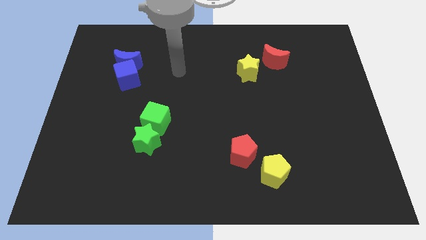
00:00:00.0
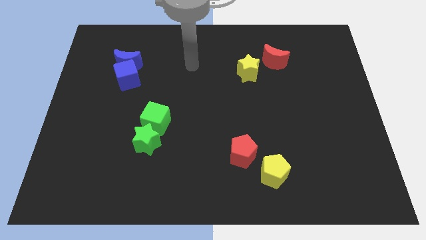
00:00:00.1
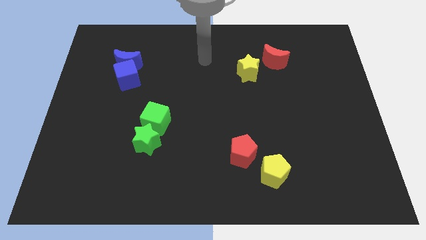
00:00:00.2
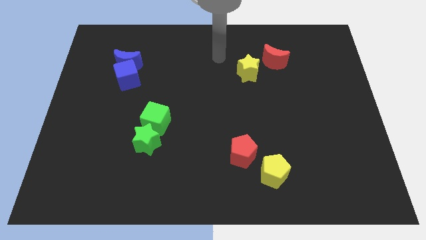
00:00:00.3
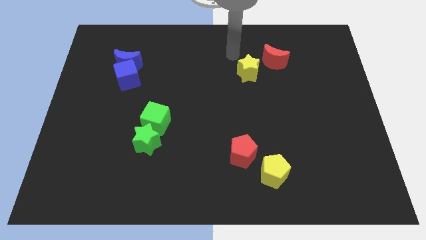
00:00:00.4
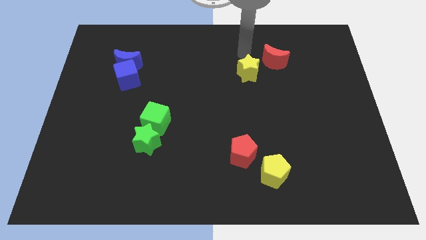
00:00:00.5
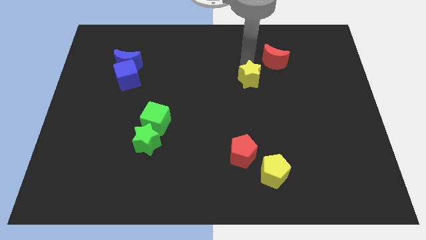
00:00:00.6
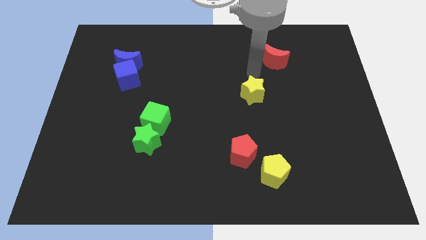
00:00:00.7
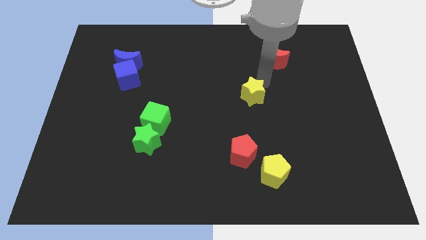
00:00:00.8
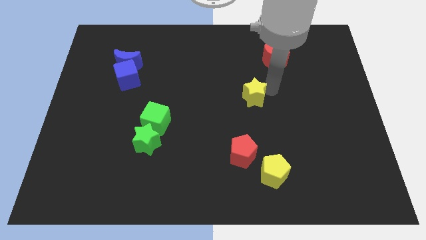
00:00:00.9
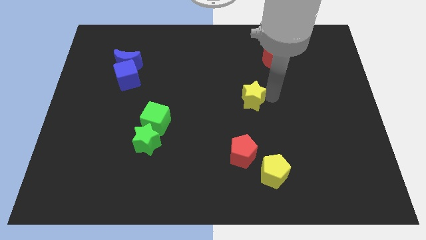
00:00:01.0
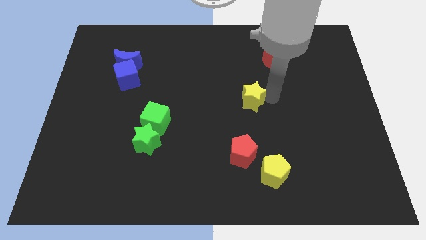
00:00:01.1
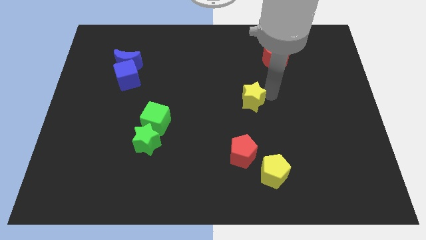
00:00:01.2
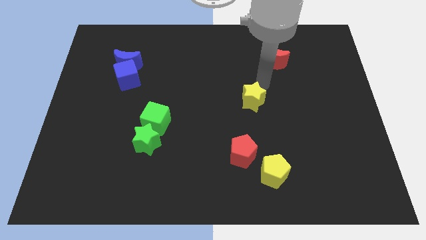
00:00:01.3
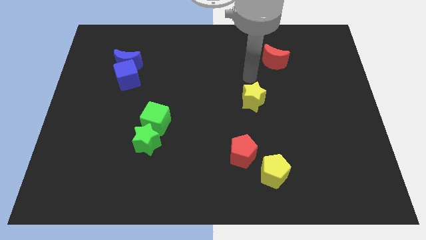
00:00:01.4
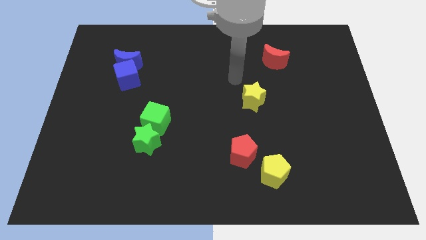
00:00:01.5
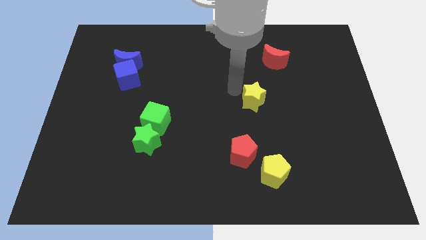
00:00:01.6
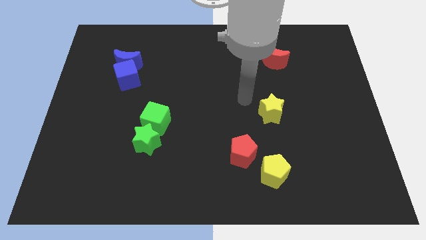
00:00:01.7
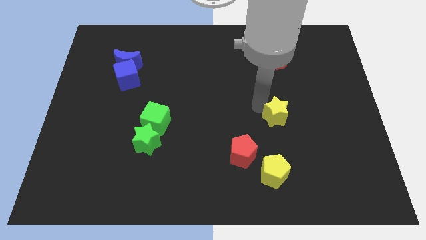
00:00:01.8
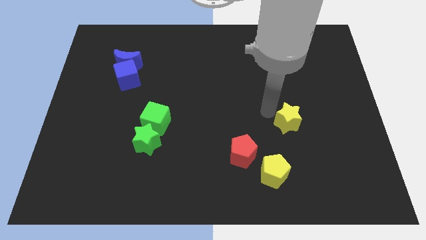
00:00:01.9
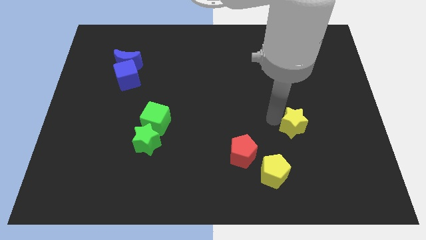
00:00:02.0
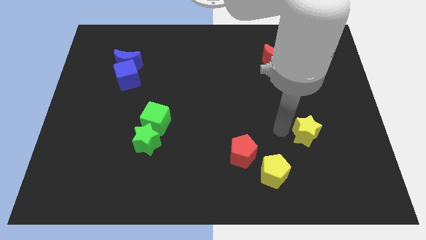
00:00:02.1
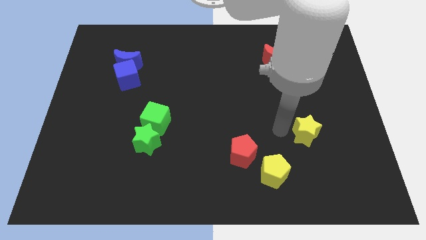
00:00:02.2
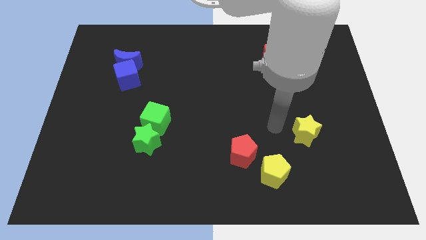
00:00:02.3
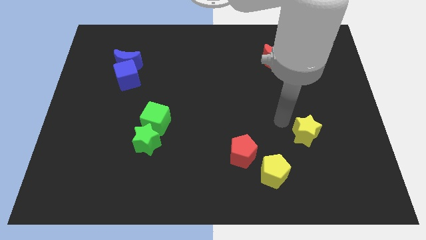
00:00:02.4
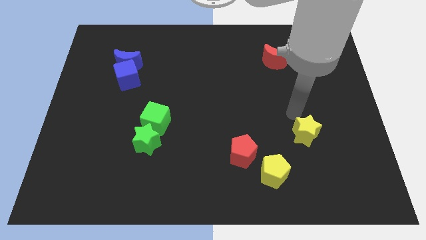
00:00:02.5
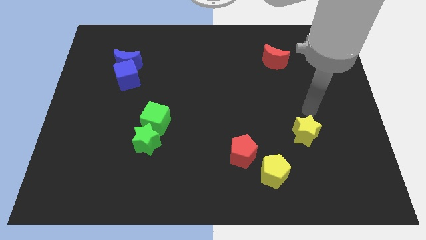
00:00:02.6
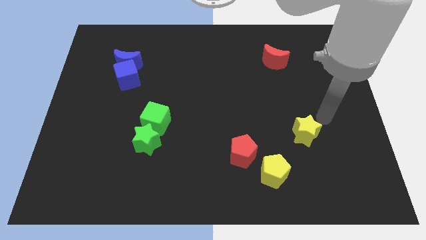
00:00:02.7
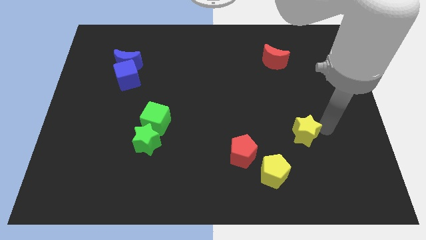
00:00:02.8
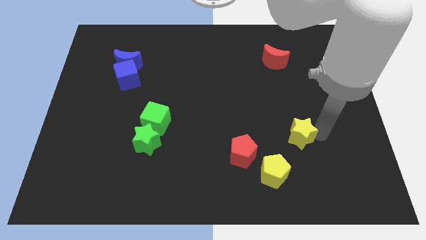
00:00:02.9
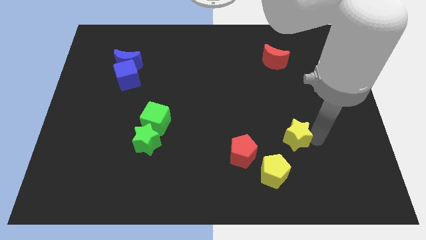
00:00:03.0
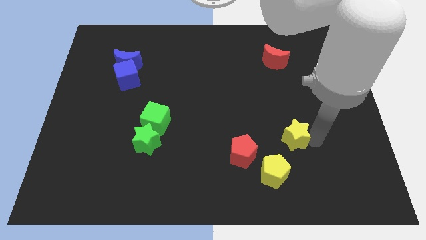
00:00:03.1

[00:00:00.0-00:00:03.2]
move the yellow star away from the red moon

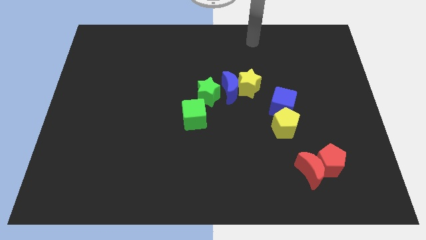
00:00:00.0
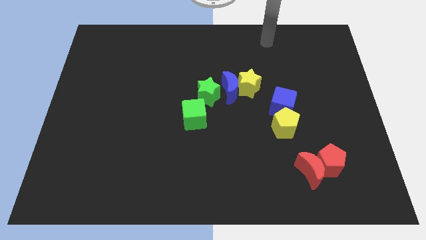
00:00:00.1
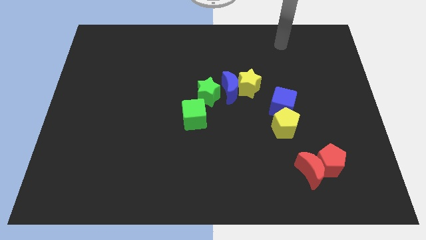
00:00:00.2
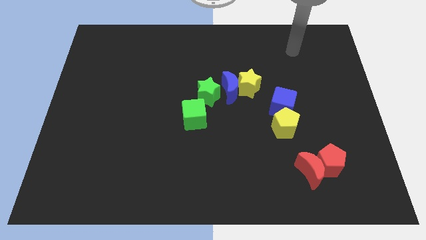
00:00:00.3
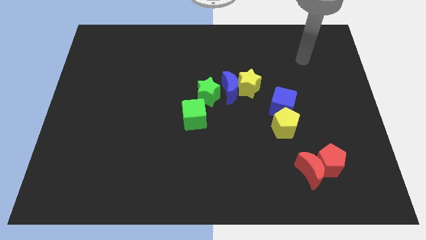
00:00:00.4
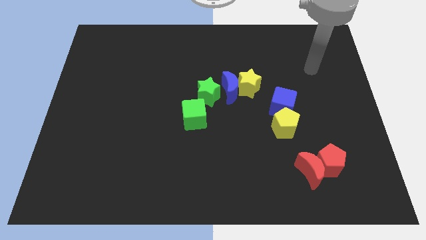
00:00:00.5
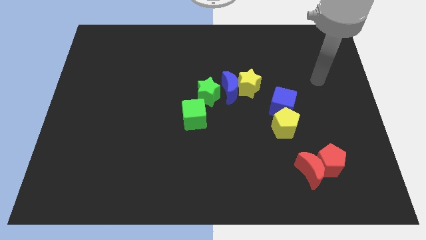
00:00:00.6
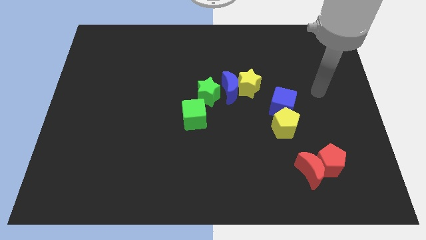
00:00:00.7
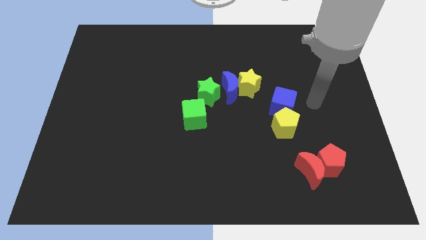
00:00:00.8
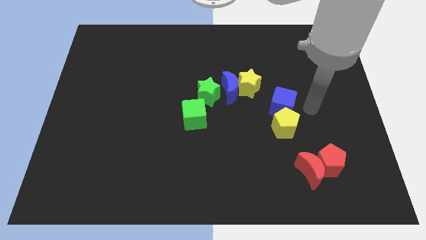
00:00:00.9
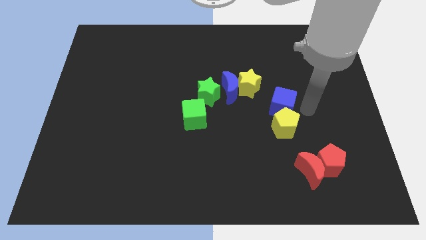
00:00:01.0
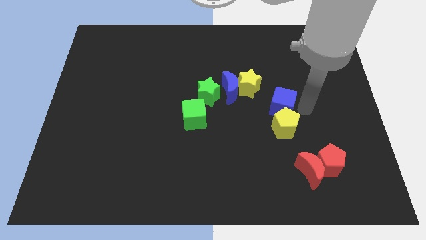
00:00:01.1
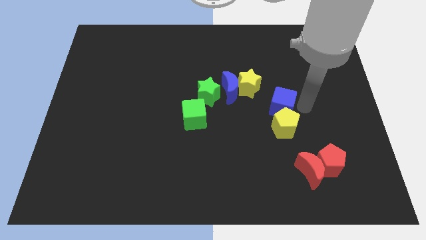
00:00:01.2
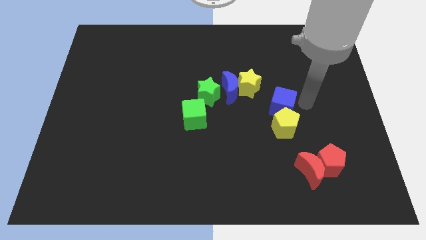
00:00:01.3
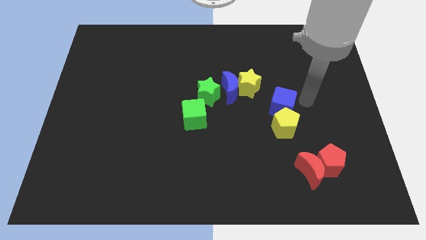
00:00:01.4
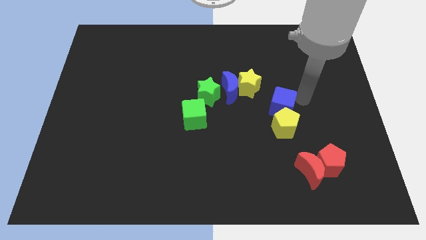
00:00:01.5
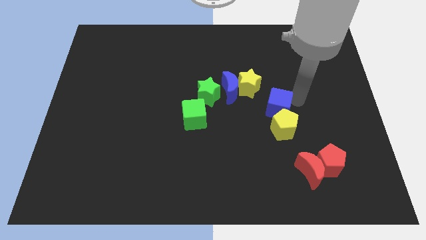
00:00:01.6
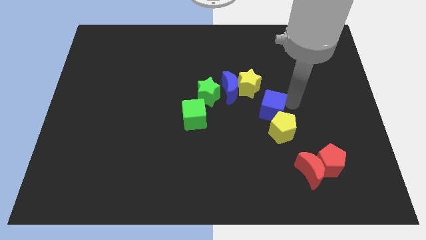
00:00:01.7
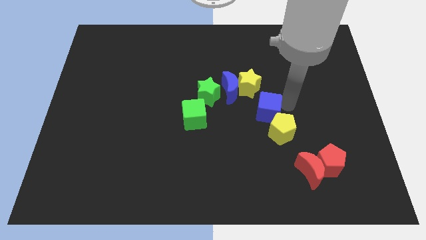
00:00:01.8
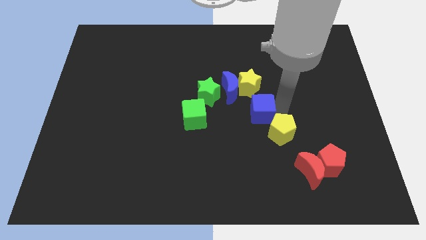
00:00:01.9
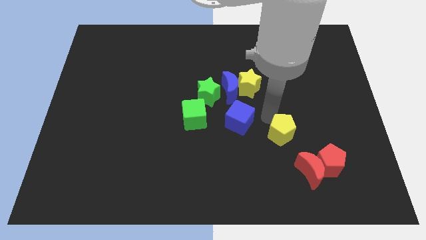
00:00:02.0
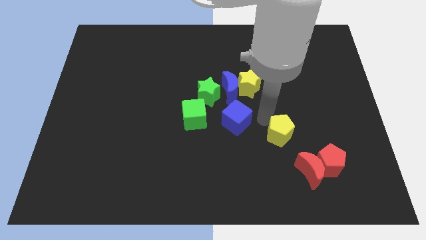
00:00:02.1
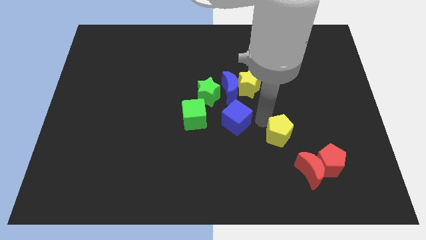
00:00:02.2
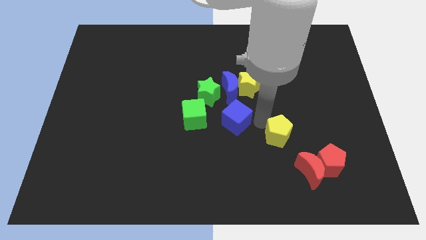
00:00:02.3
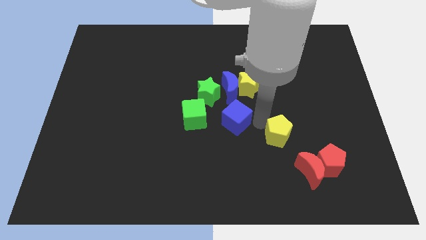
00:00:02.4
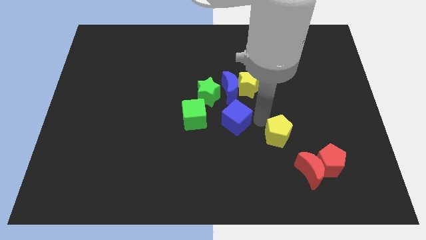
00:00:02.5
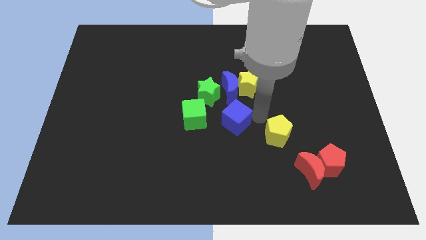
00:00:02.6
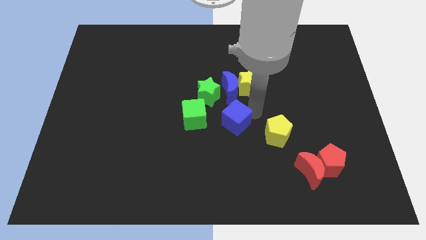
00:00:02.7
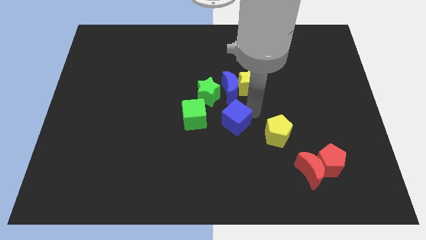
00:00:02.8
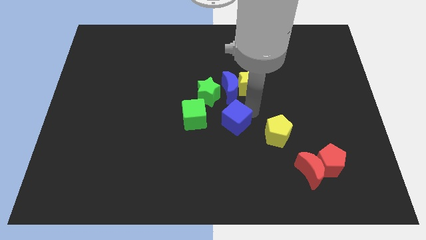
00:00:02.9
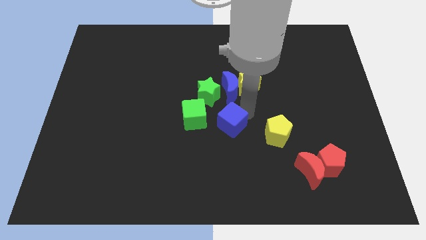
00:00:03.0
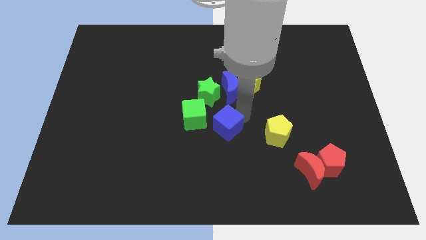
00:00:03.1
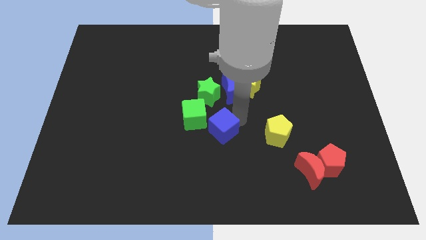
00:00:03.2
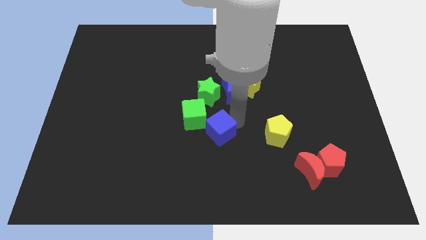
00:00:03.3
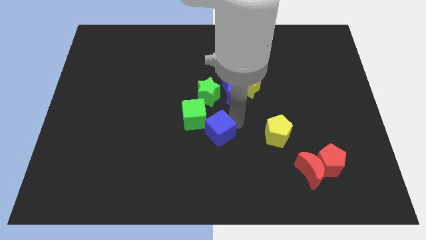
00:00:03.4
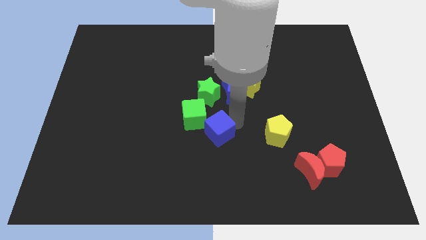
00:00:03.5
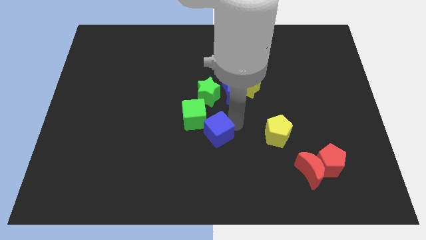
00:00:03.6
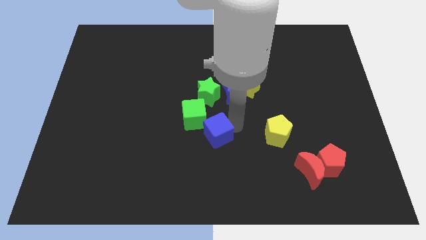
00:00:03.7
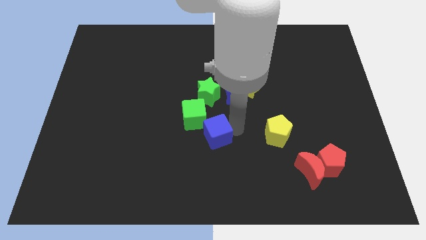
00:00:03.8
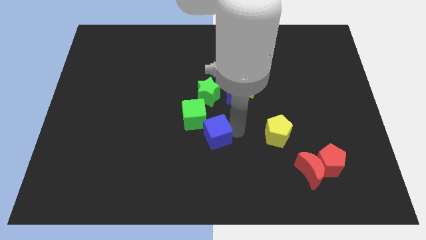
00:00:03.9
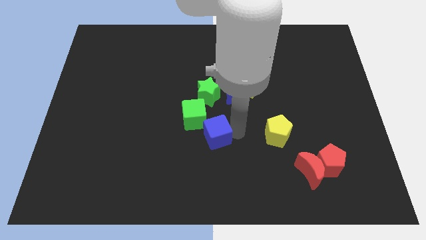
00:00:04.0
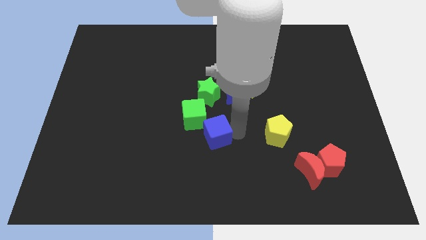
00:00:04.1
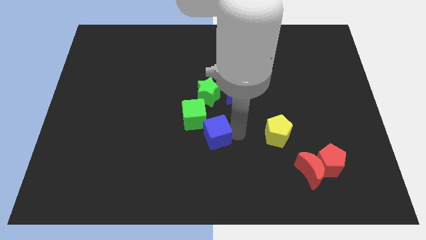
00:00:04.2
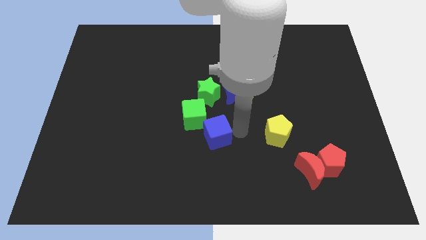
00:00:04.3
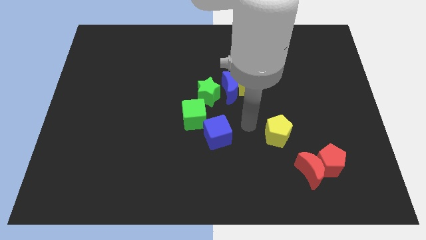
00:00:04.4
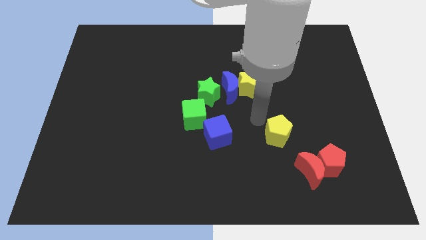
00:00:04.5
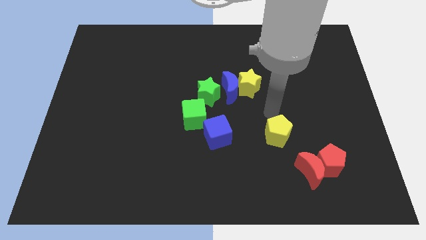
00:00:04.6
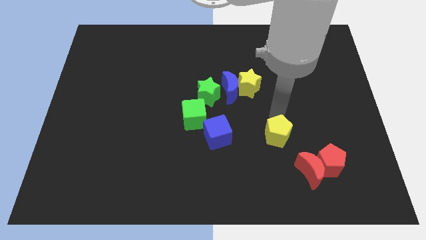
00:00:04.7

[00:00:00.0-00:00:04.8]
put the blue cube at the right bottom of green cube

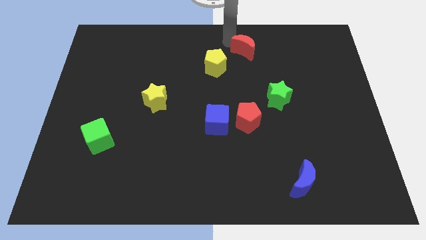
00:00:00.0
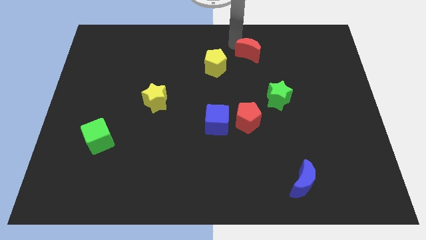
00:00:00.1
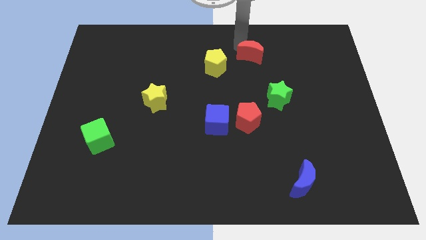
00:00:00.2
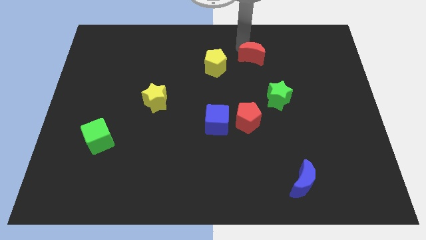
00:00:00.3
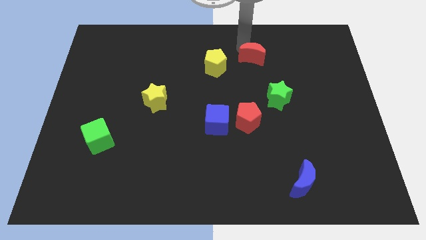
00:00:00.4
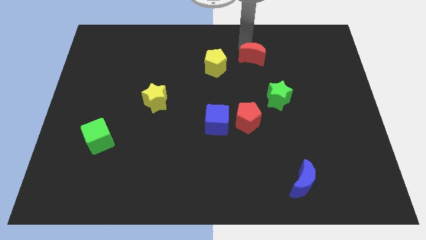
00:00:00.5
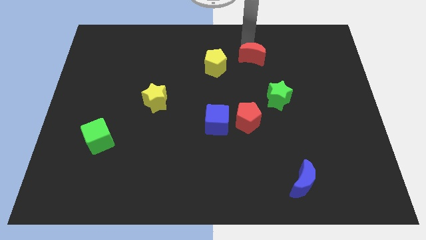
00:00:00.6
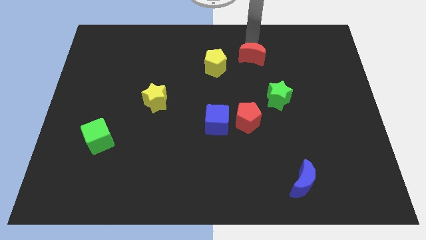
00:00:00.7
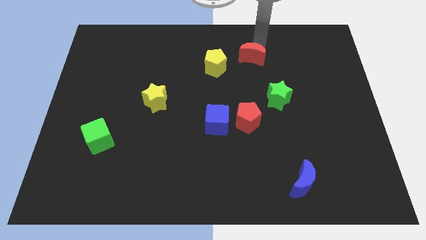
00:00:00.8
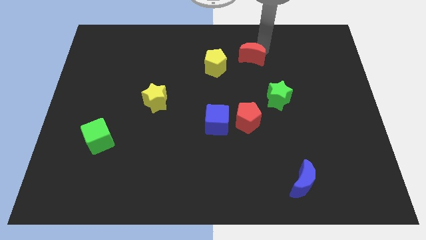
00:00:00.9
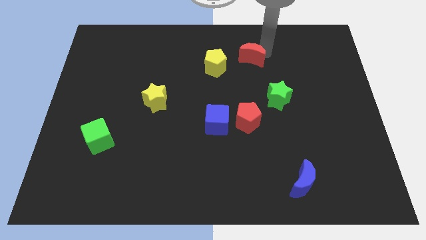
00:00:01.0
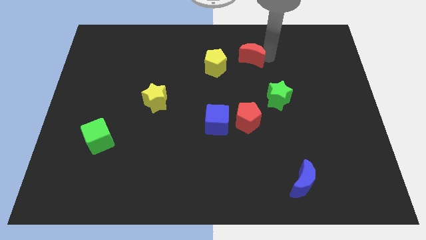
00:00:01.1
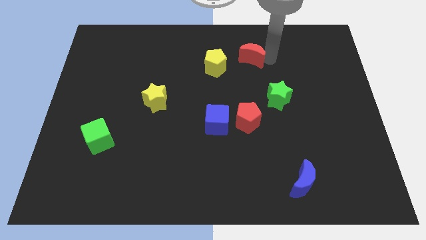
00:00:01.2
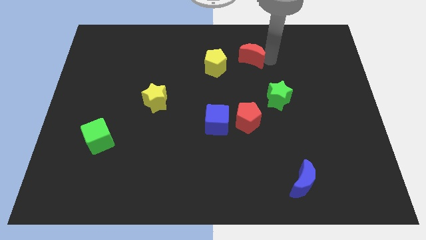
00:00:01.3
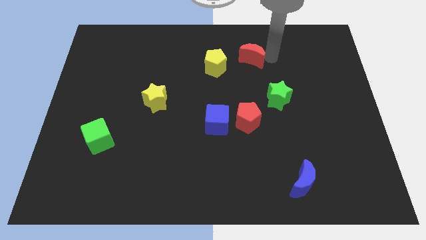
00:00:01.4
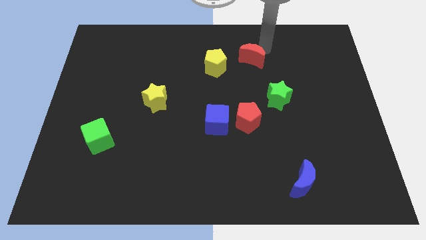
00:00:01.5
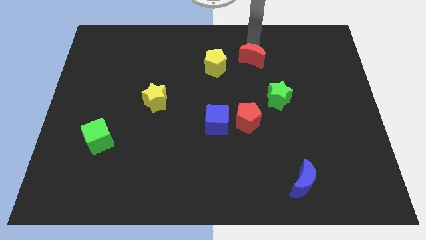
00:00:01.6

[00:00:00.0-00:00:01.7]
push red moon slightly downwards
